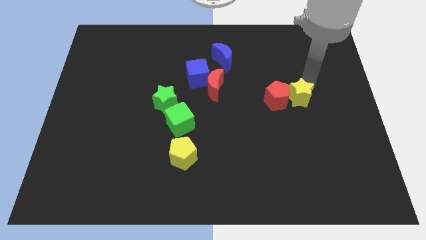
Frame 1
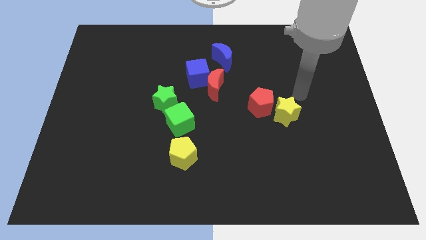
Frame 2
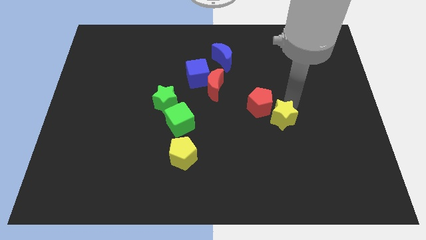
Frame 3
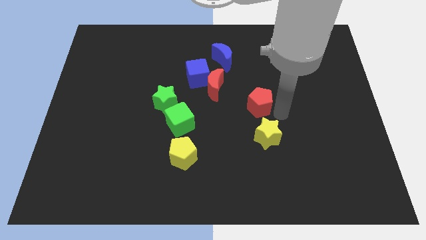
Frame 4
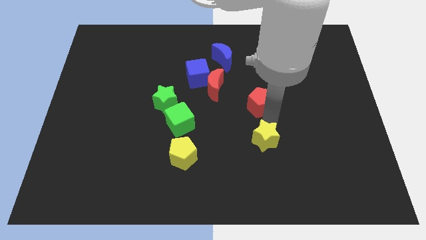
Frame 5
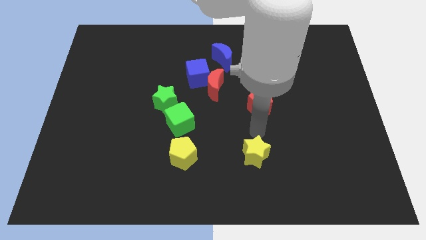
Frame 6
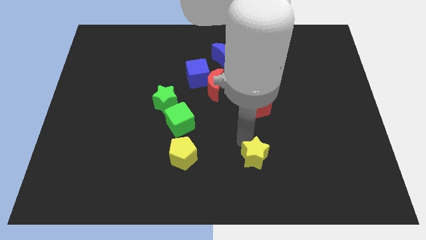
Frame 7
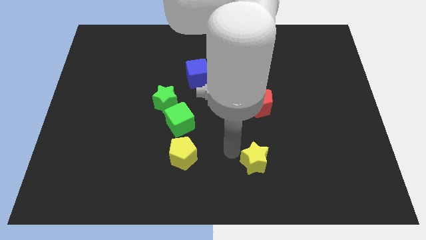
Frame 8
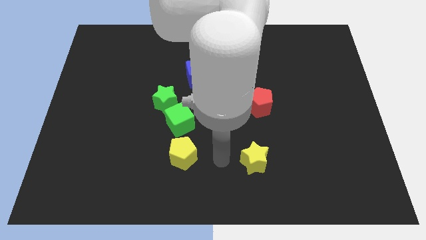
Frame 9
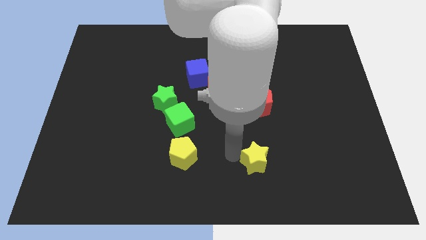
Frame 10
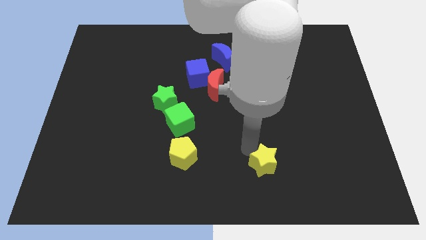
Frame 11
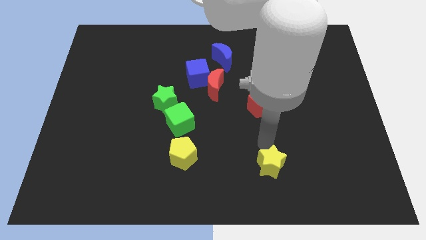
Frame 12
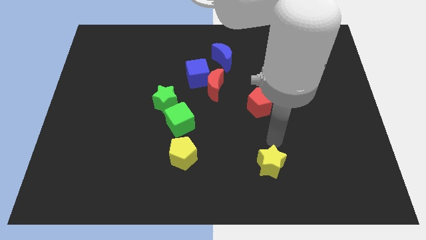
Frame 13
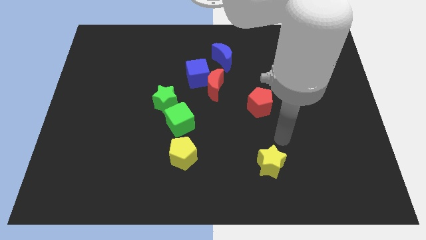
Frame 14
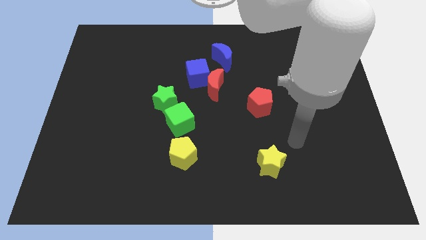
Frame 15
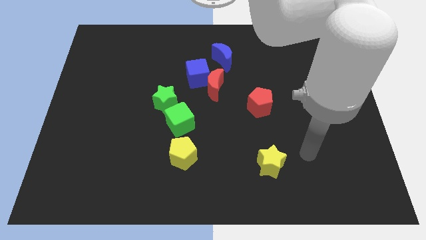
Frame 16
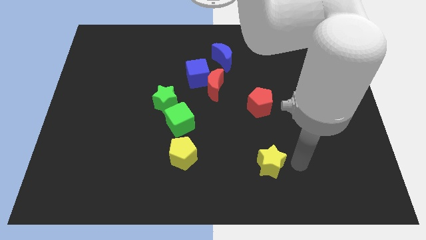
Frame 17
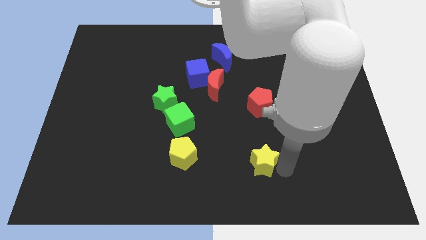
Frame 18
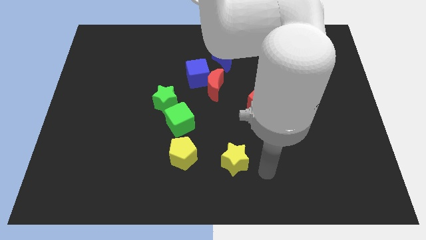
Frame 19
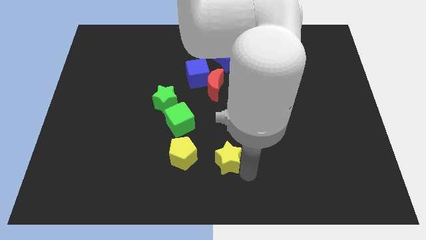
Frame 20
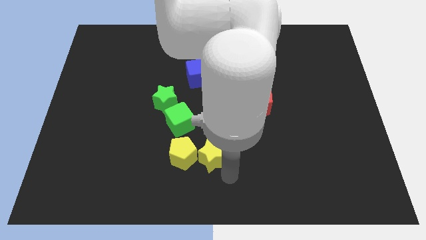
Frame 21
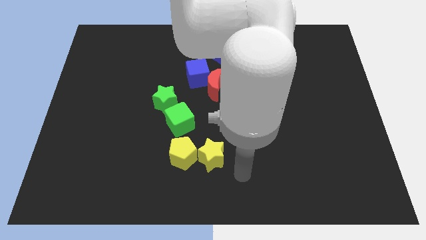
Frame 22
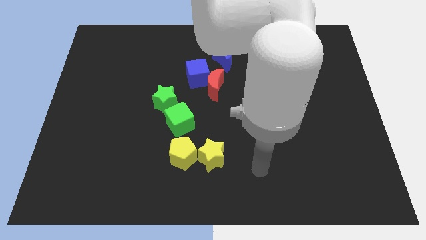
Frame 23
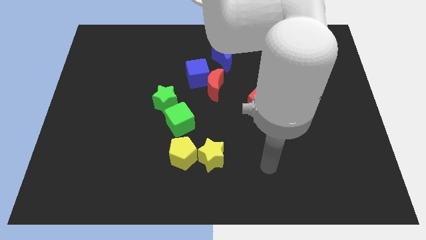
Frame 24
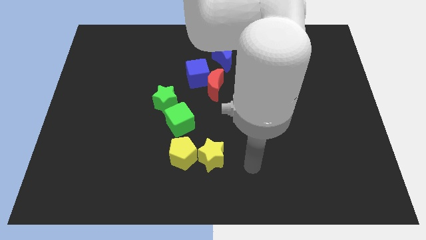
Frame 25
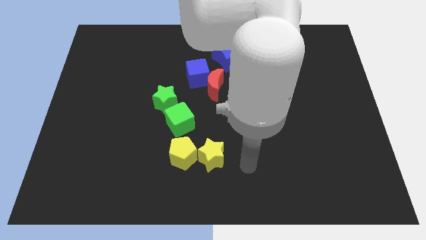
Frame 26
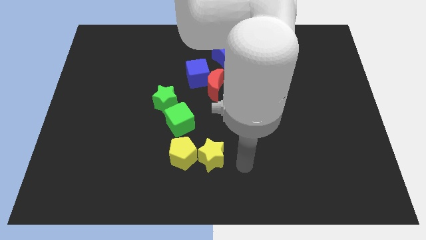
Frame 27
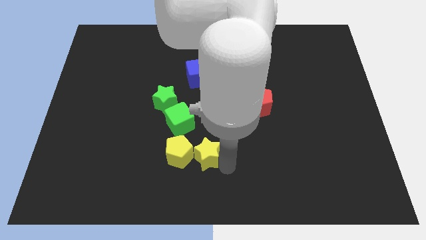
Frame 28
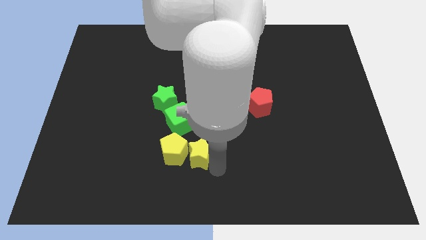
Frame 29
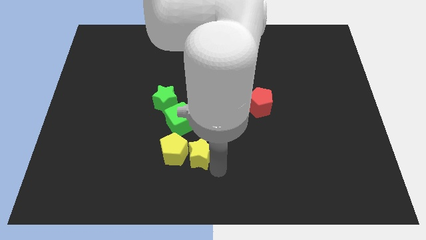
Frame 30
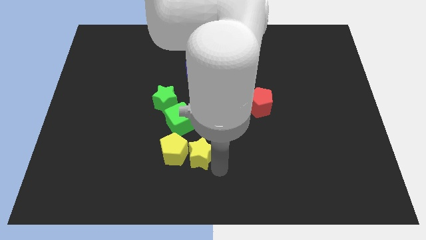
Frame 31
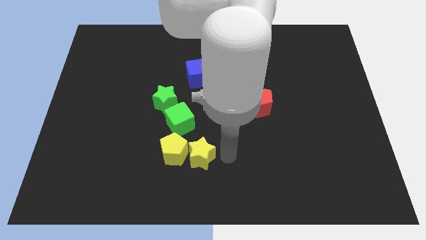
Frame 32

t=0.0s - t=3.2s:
push the yellow star into the yellow pentagon

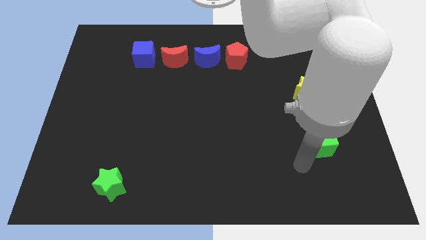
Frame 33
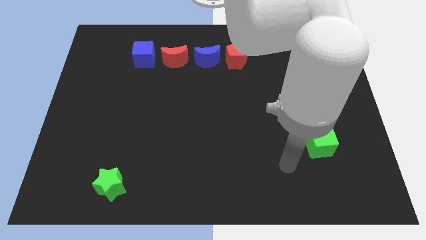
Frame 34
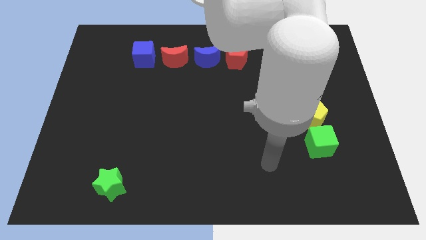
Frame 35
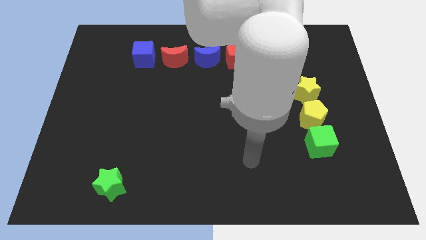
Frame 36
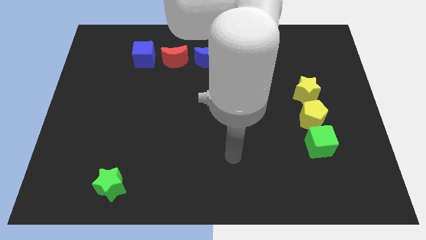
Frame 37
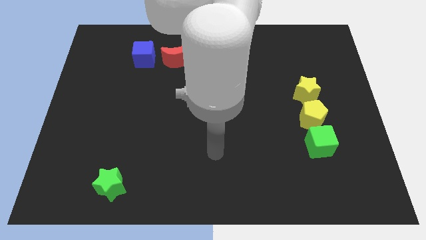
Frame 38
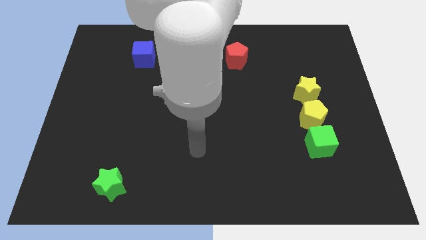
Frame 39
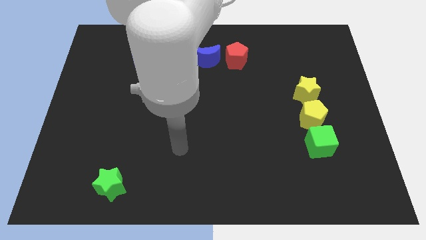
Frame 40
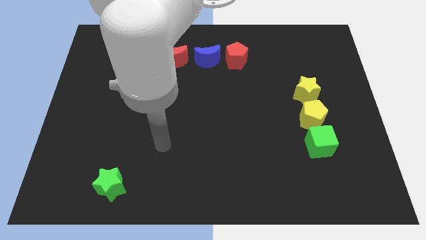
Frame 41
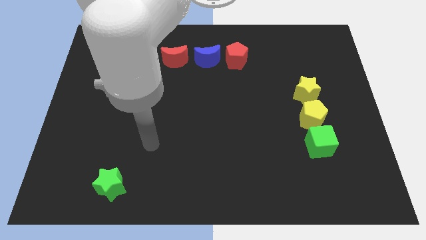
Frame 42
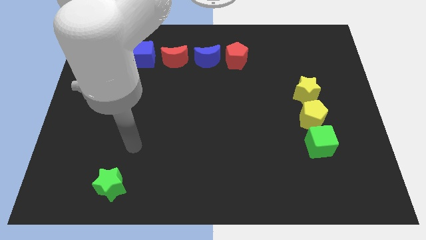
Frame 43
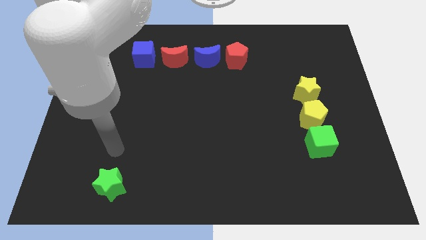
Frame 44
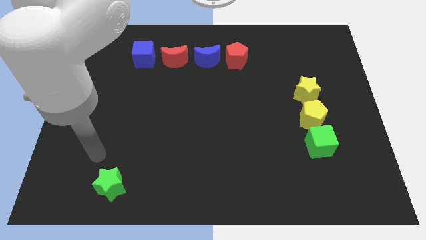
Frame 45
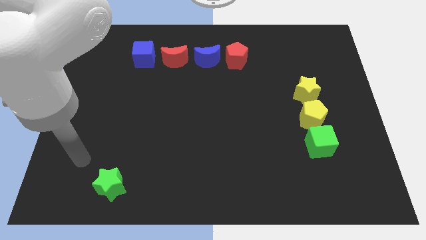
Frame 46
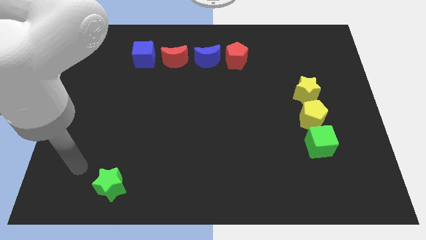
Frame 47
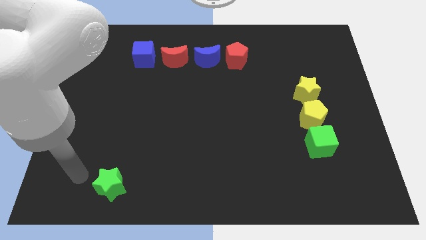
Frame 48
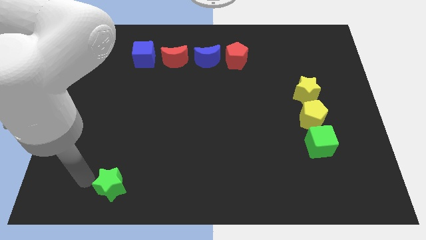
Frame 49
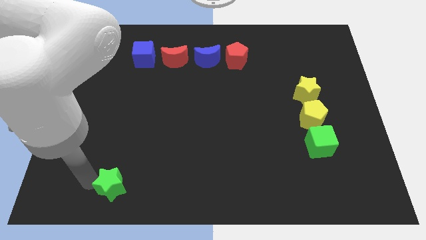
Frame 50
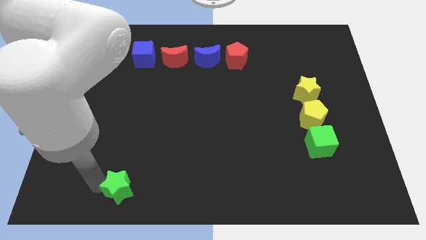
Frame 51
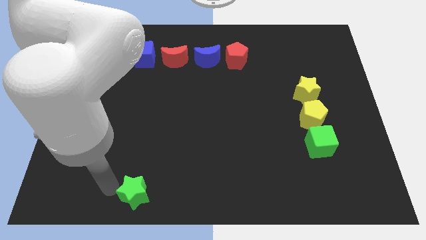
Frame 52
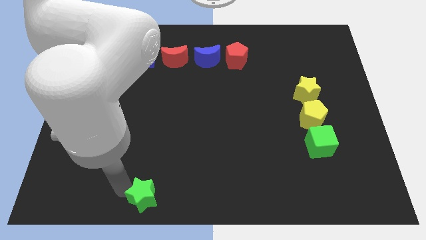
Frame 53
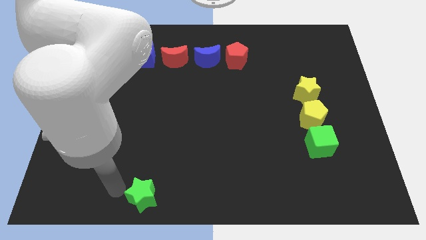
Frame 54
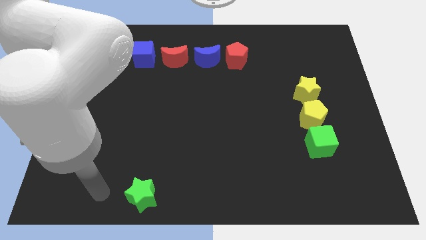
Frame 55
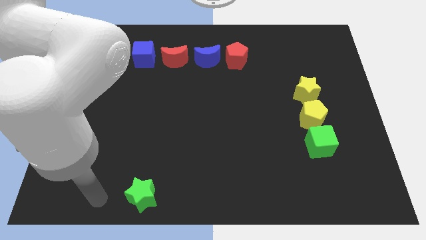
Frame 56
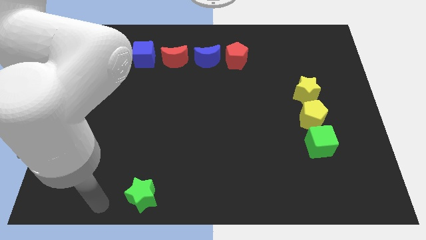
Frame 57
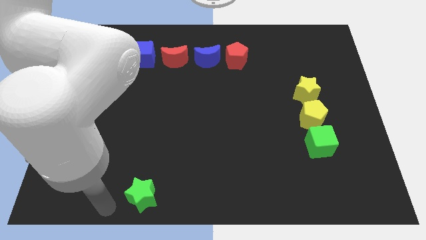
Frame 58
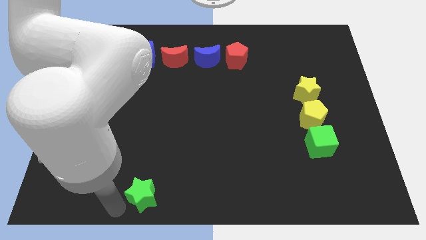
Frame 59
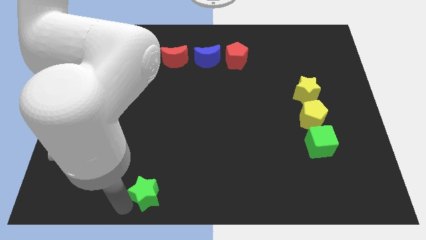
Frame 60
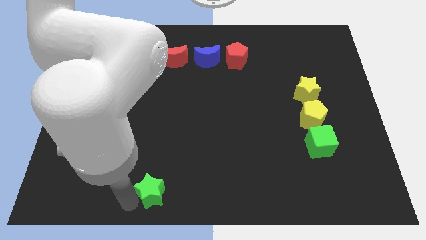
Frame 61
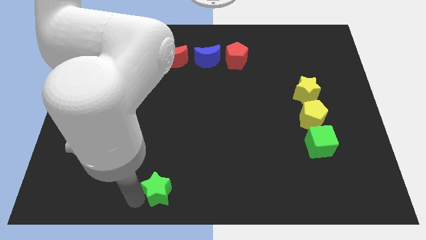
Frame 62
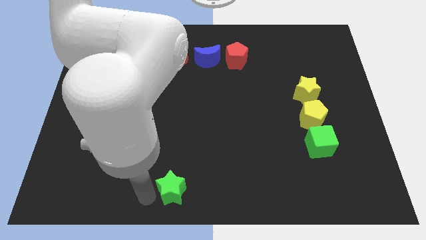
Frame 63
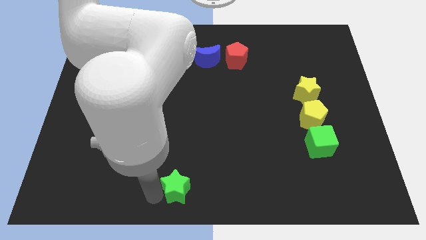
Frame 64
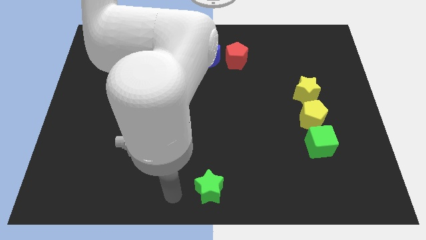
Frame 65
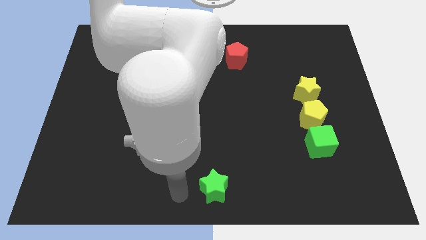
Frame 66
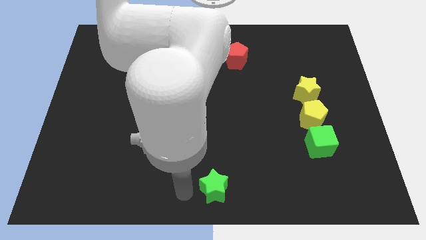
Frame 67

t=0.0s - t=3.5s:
place the green star at the bottom center of the board

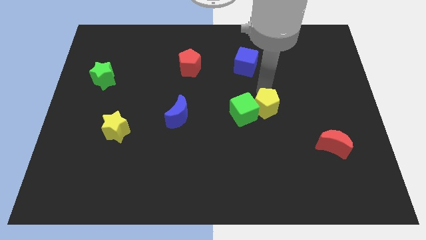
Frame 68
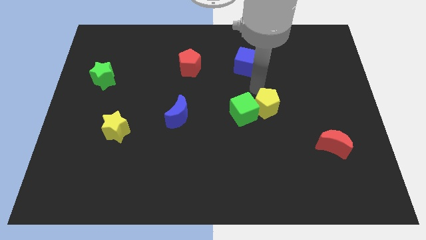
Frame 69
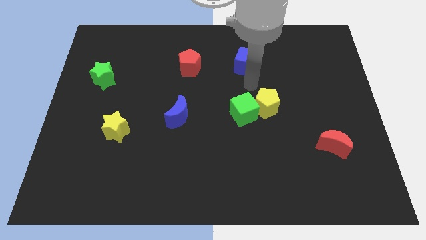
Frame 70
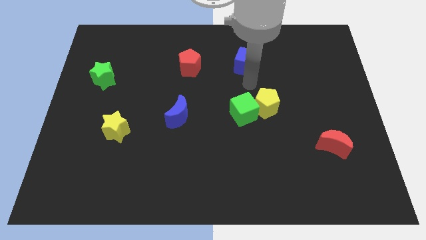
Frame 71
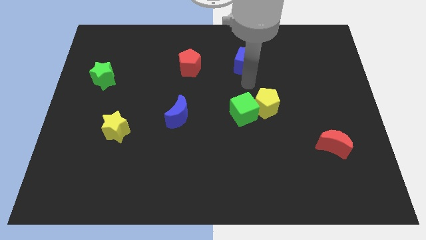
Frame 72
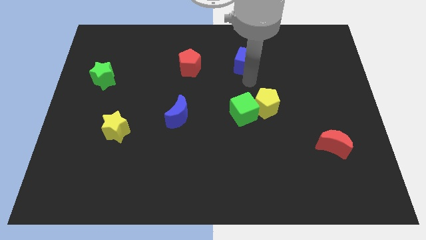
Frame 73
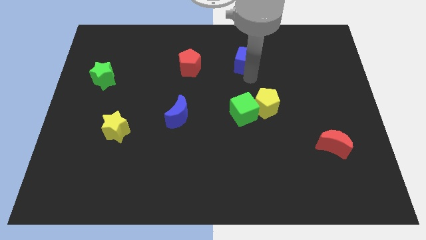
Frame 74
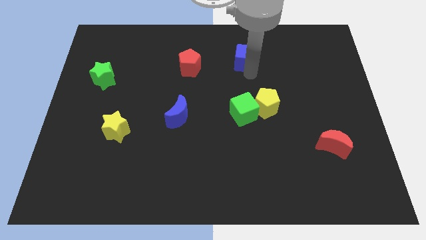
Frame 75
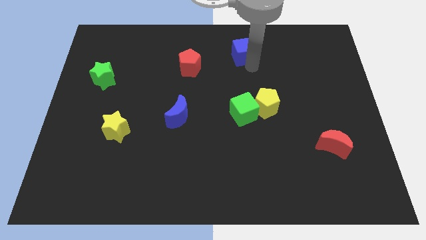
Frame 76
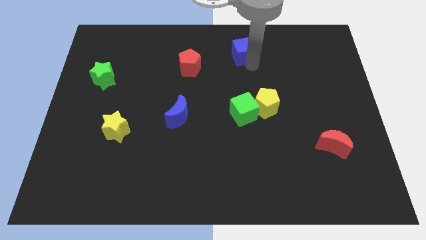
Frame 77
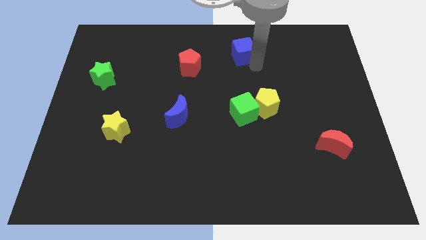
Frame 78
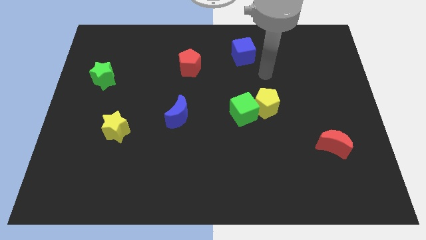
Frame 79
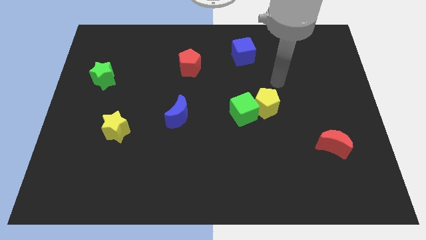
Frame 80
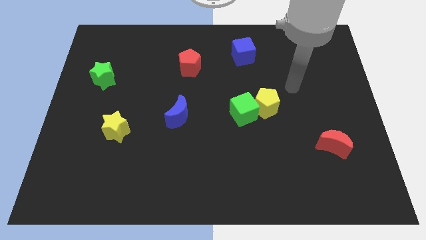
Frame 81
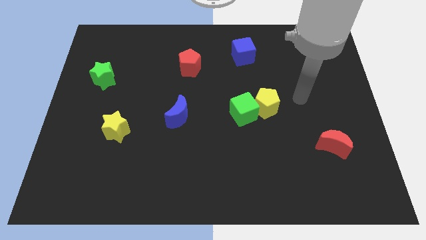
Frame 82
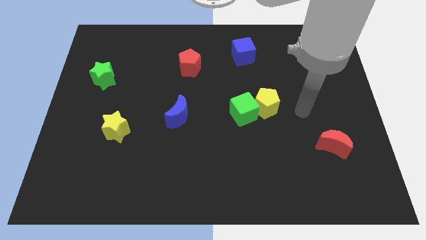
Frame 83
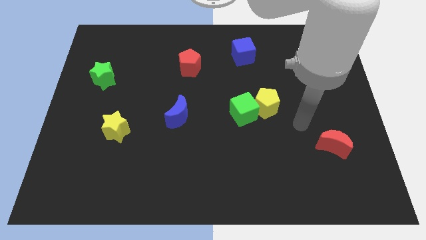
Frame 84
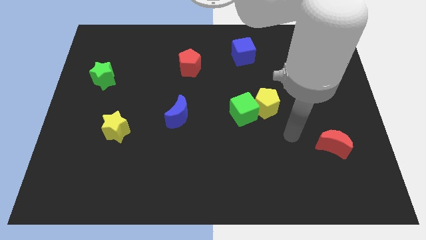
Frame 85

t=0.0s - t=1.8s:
push the blue cube diagonally top right to the red pentagon

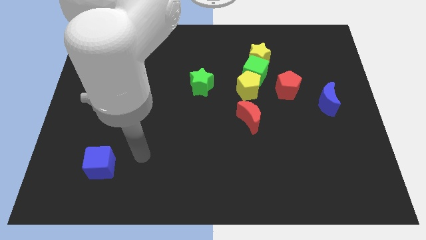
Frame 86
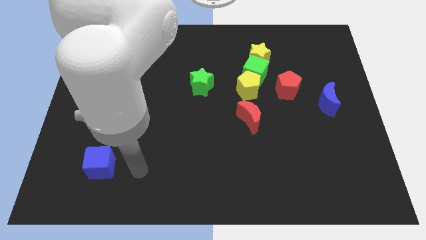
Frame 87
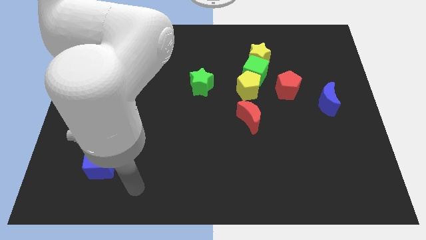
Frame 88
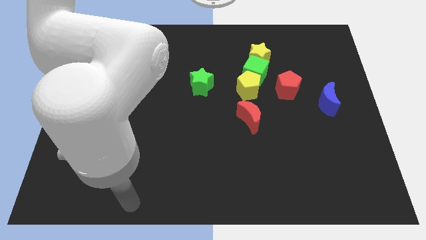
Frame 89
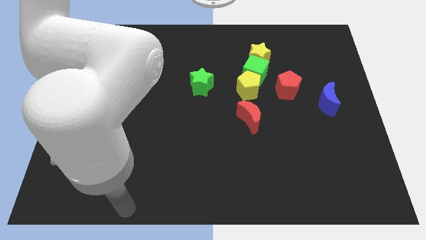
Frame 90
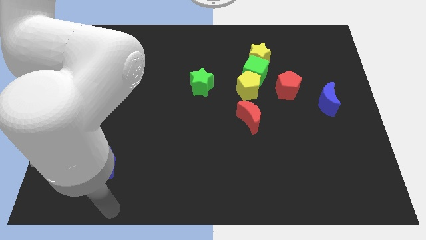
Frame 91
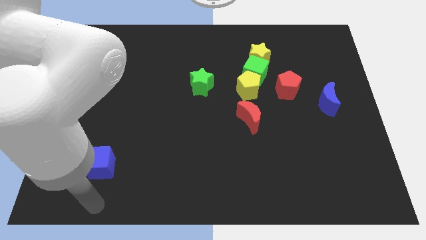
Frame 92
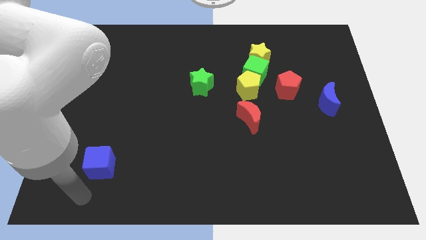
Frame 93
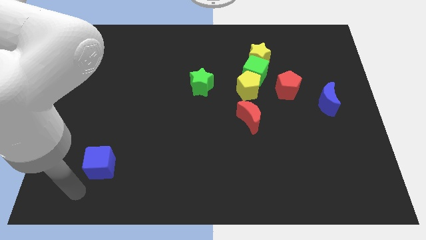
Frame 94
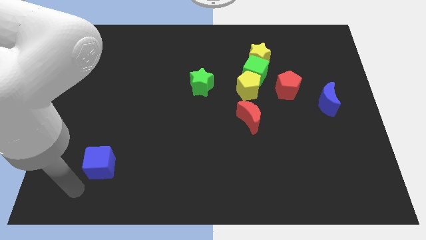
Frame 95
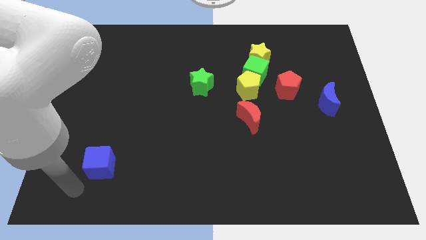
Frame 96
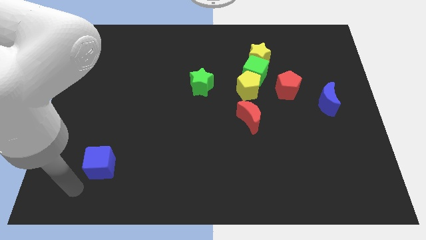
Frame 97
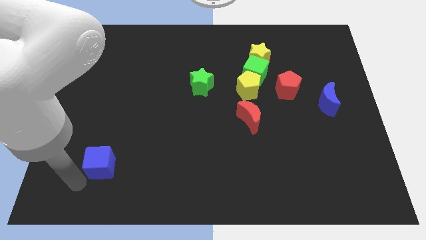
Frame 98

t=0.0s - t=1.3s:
move your arm to the bottom of blue cube
